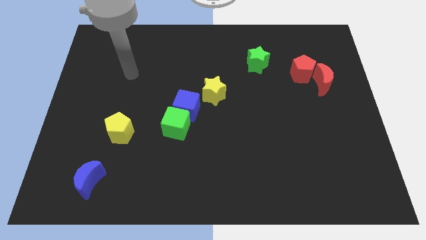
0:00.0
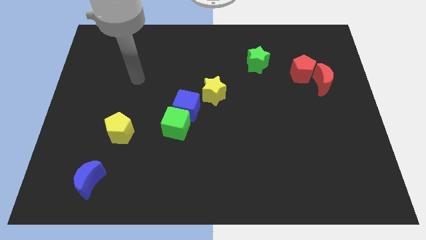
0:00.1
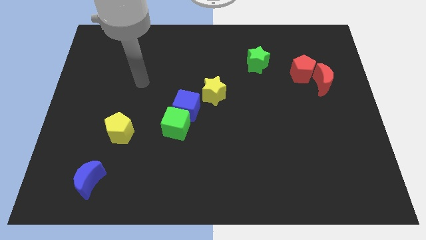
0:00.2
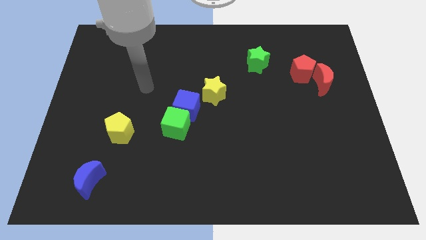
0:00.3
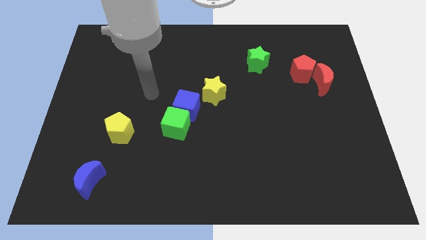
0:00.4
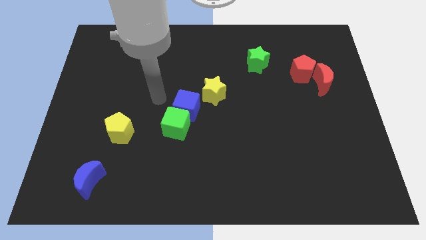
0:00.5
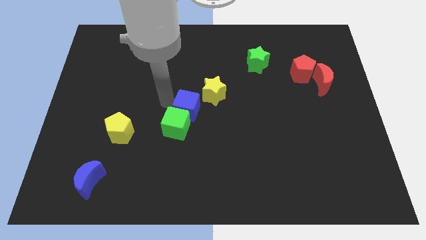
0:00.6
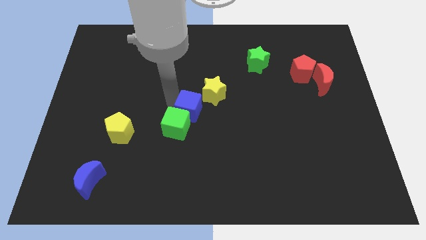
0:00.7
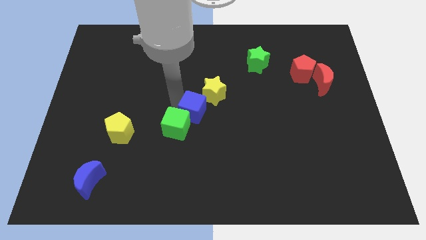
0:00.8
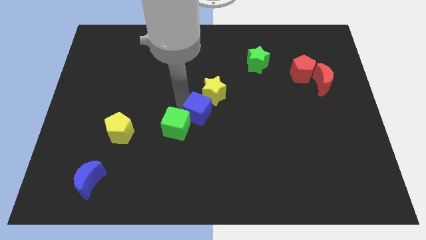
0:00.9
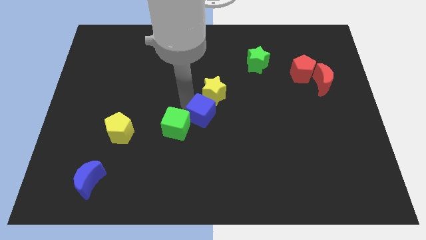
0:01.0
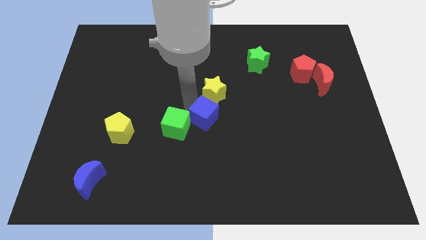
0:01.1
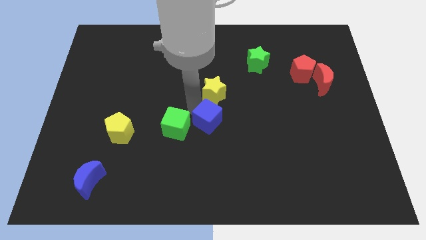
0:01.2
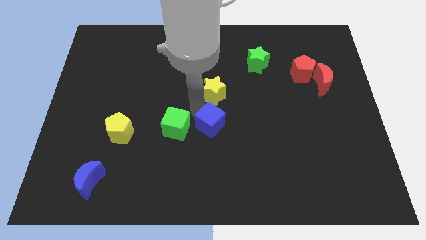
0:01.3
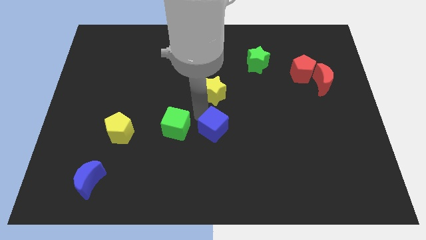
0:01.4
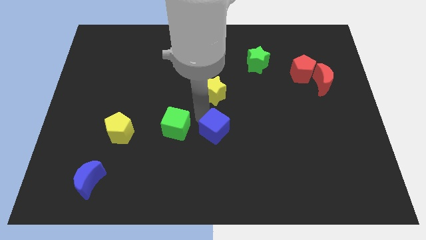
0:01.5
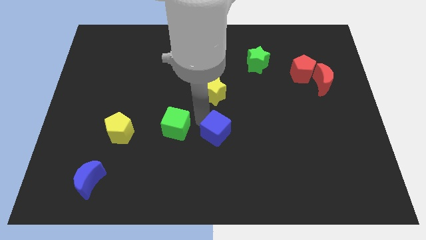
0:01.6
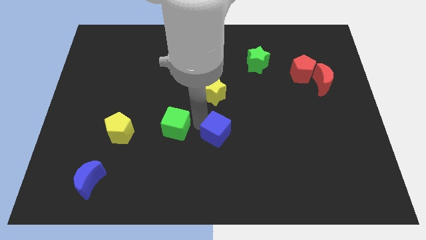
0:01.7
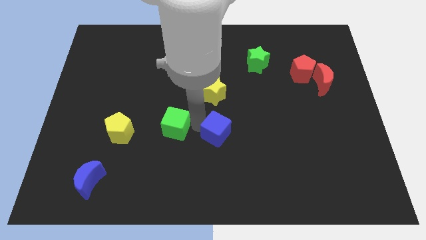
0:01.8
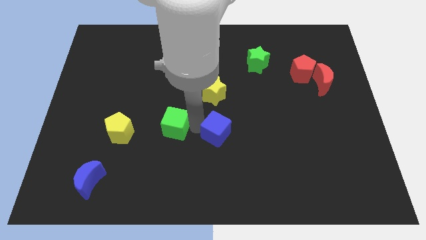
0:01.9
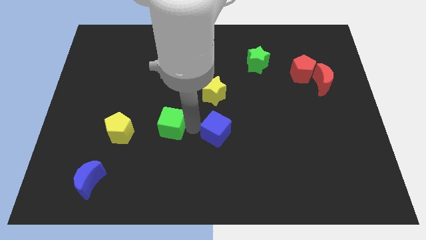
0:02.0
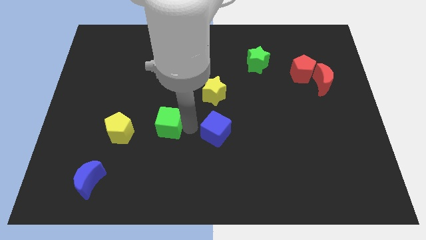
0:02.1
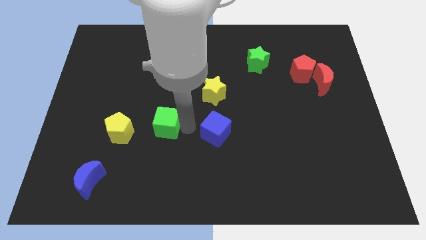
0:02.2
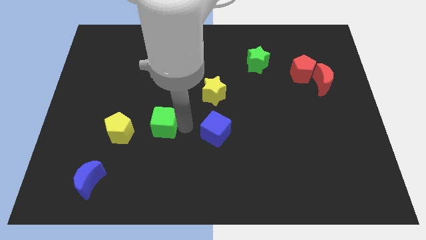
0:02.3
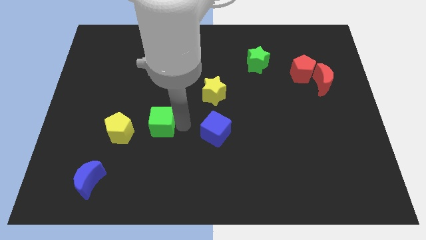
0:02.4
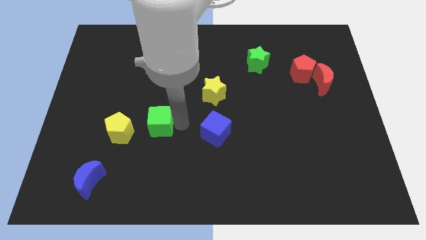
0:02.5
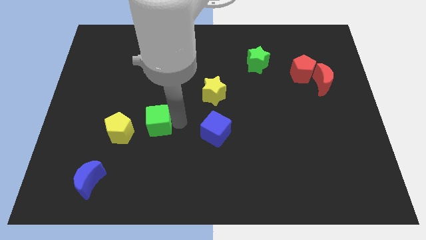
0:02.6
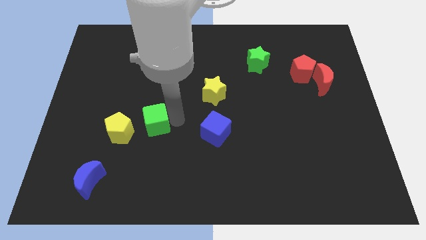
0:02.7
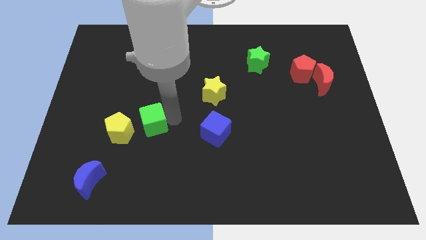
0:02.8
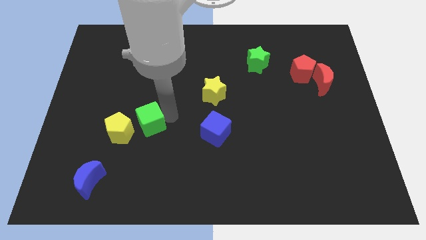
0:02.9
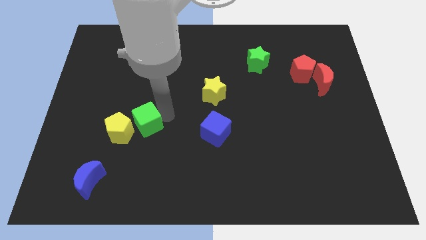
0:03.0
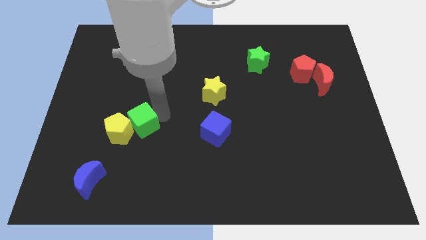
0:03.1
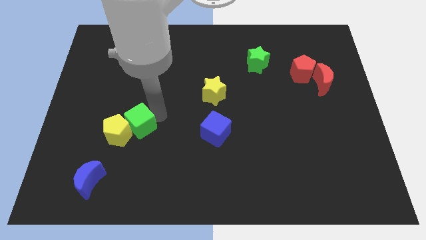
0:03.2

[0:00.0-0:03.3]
push the green cube to the yellow pentagon

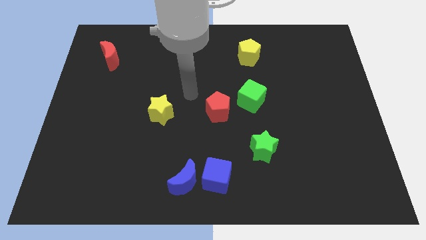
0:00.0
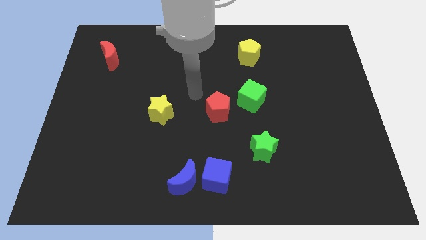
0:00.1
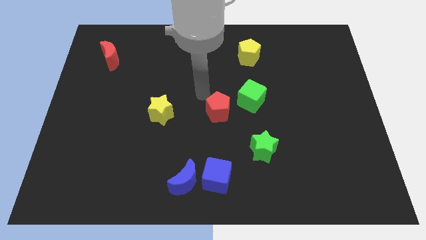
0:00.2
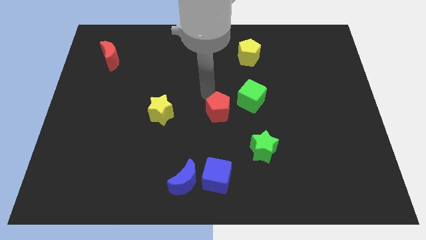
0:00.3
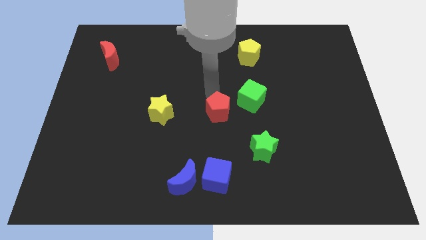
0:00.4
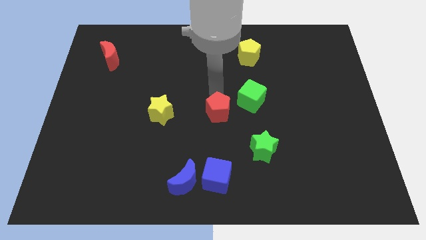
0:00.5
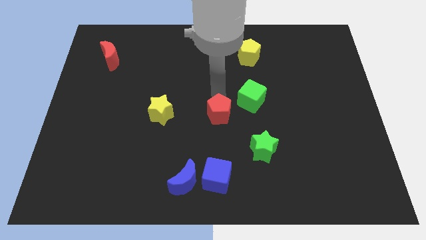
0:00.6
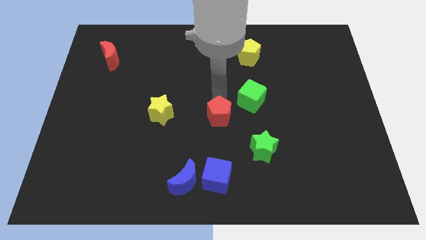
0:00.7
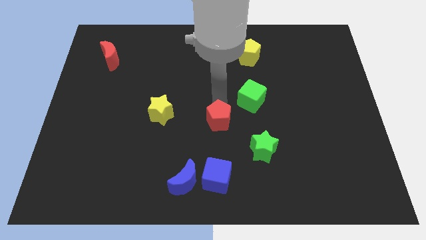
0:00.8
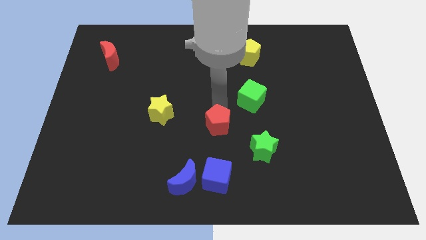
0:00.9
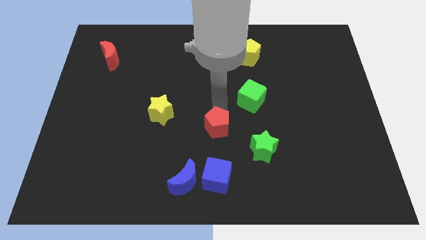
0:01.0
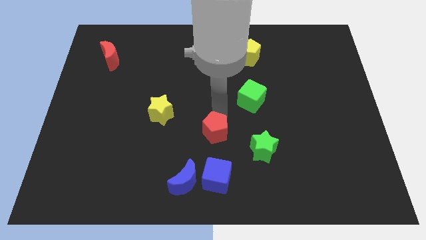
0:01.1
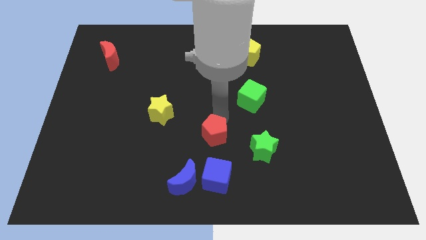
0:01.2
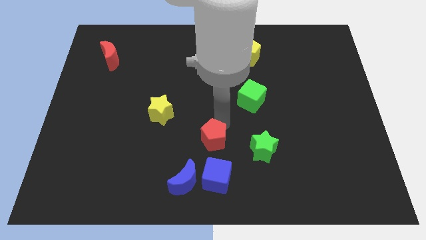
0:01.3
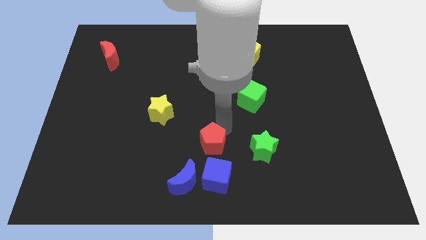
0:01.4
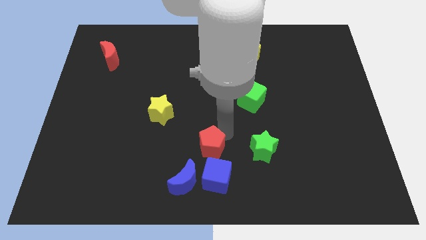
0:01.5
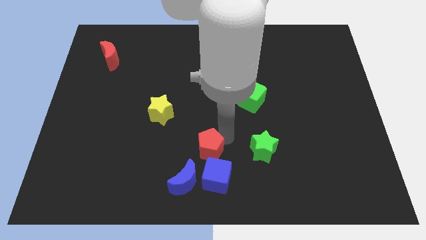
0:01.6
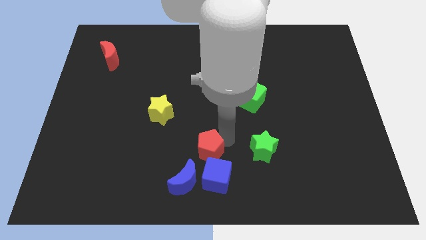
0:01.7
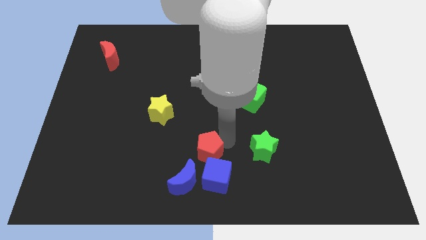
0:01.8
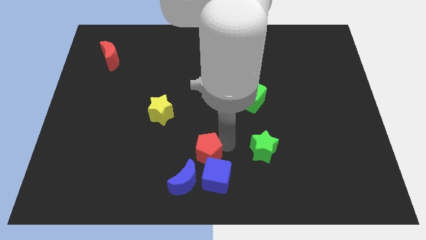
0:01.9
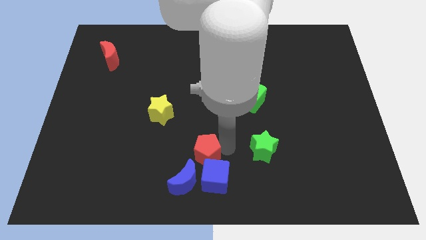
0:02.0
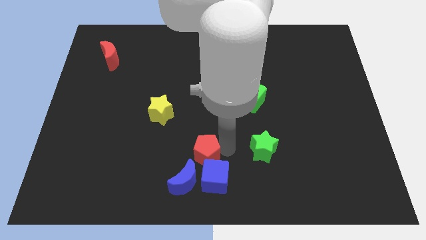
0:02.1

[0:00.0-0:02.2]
slide the red pentagon close to the blue cube

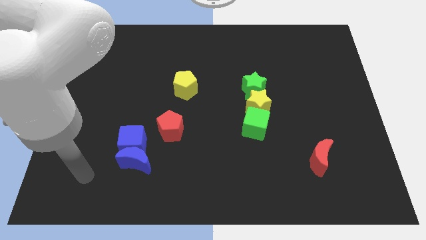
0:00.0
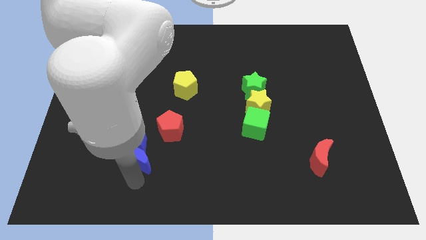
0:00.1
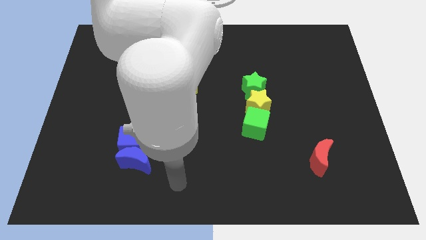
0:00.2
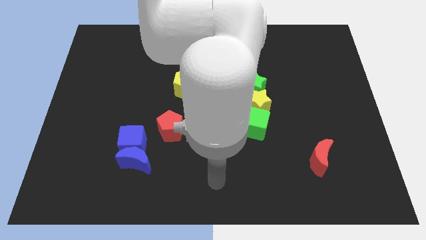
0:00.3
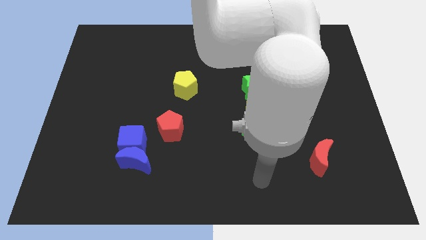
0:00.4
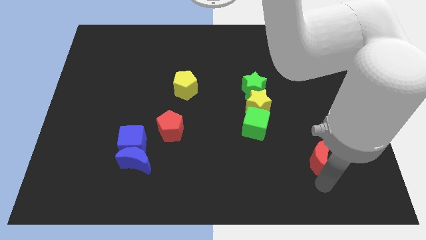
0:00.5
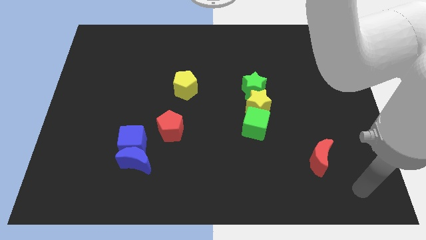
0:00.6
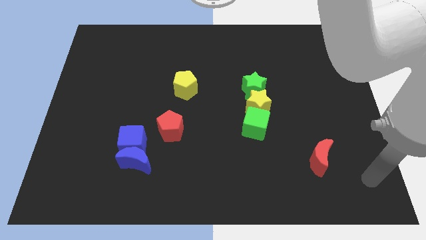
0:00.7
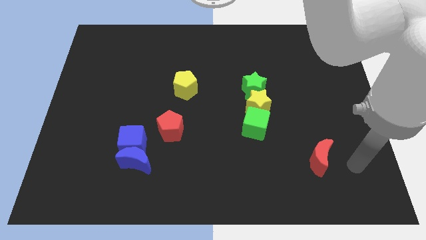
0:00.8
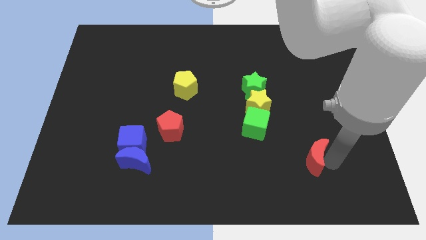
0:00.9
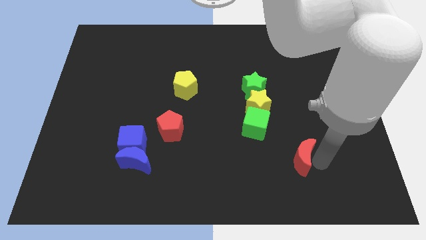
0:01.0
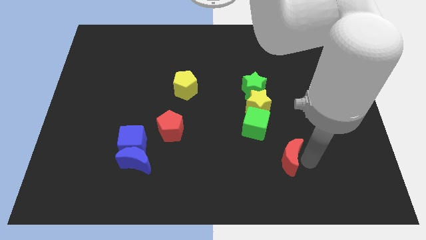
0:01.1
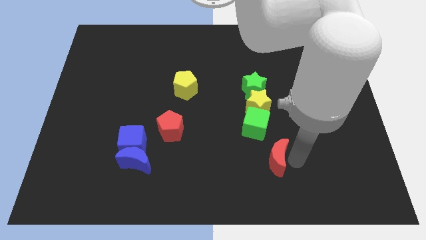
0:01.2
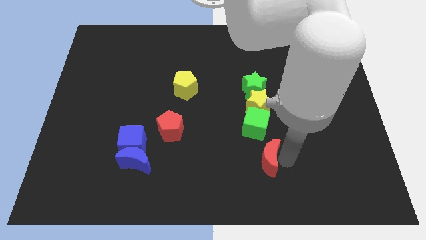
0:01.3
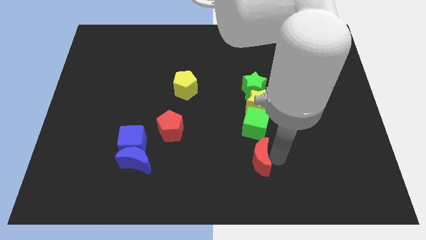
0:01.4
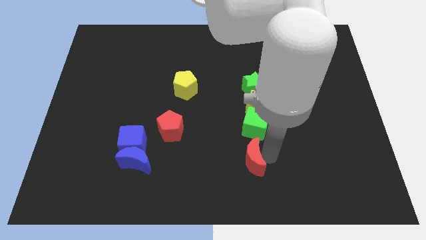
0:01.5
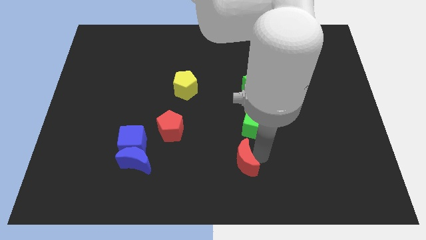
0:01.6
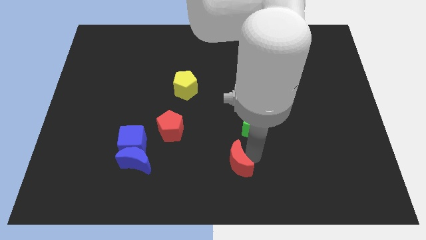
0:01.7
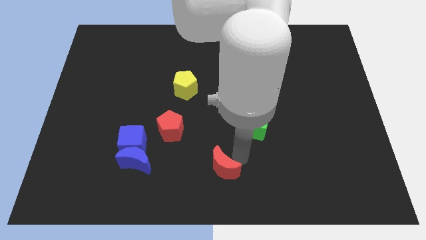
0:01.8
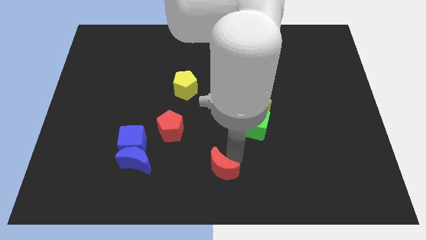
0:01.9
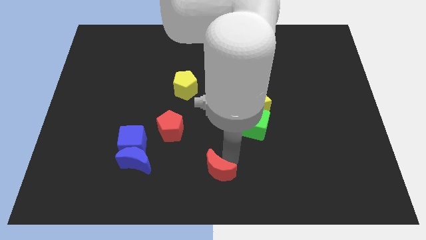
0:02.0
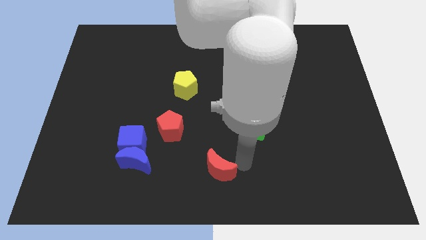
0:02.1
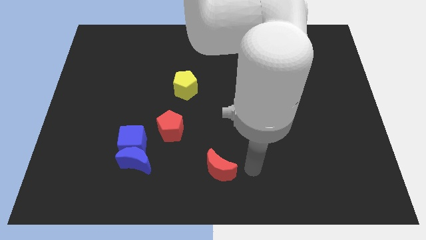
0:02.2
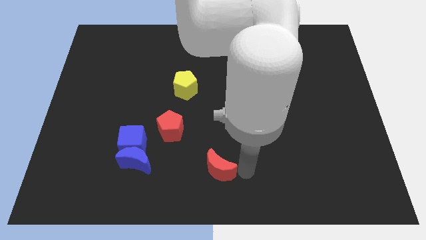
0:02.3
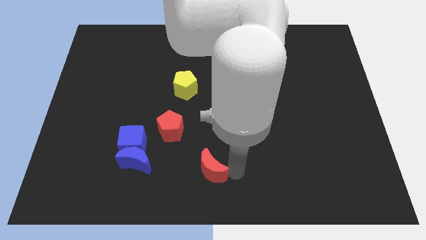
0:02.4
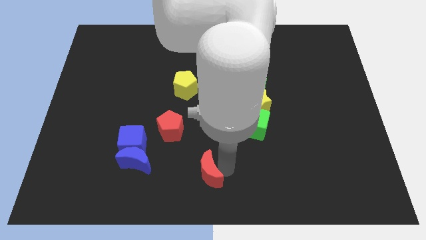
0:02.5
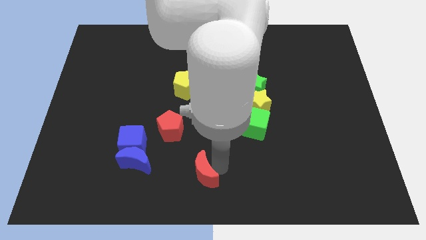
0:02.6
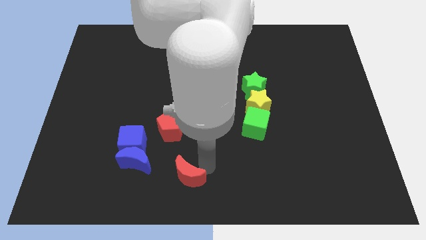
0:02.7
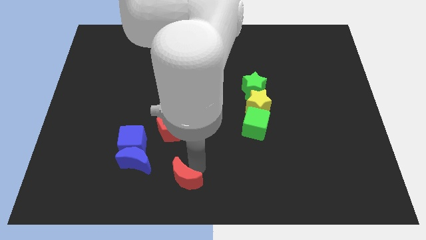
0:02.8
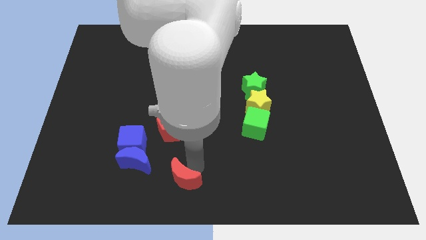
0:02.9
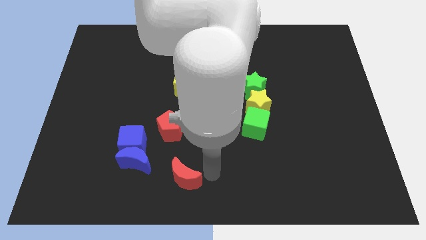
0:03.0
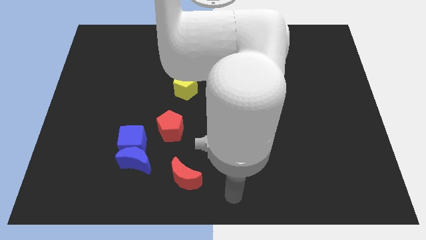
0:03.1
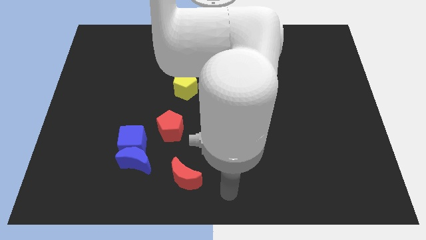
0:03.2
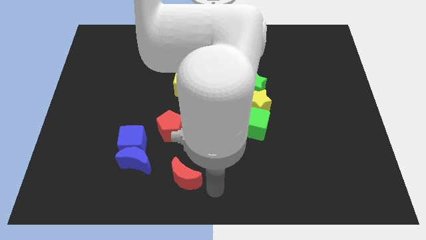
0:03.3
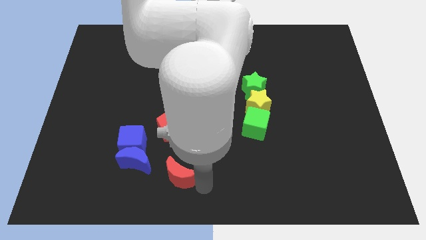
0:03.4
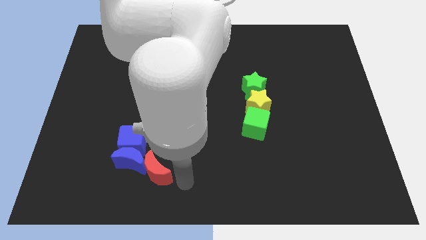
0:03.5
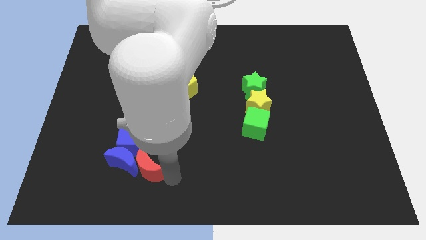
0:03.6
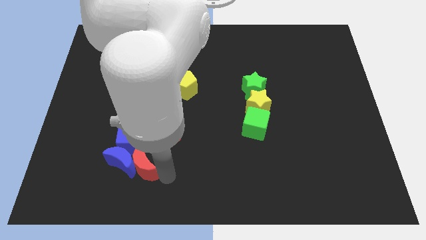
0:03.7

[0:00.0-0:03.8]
move the red moon to the blue moon
